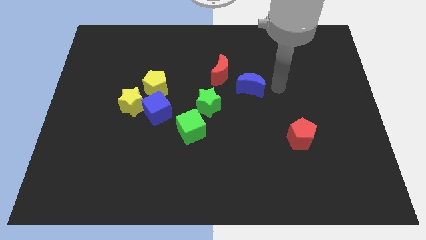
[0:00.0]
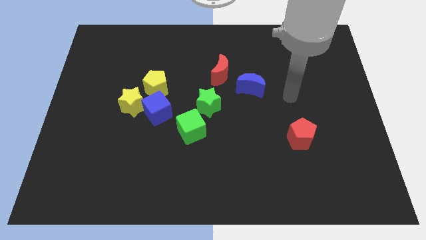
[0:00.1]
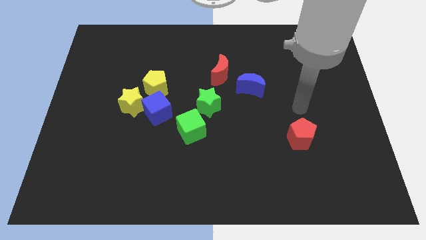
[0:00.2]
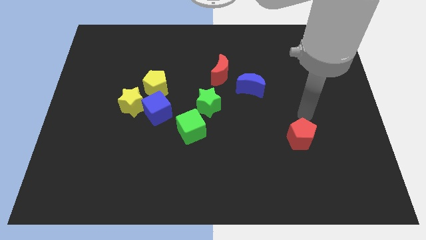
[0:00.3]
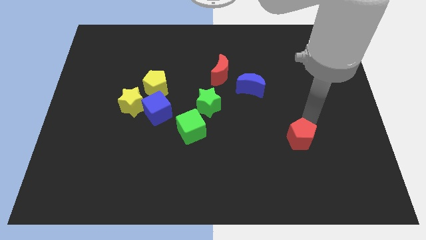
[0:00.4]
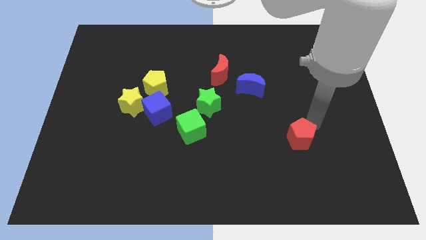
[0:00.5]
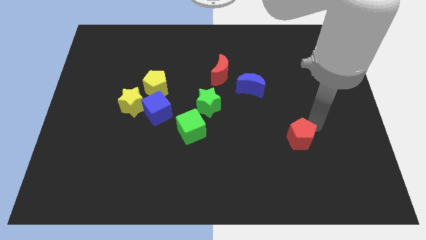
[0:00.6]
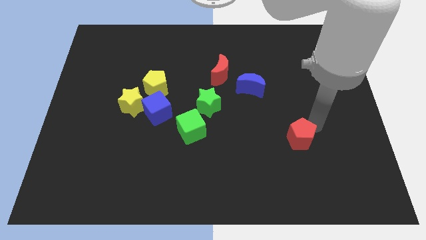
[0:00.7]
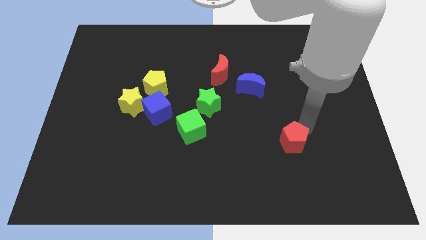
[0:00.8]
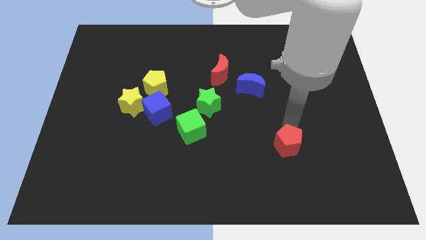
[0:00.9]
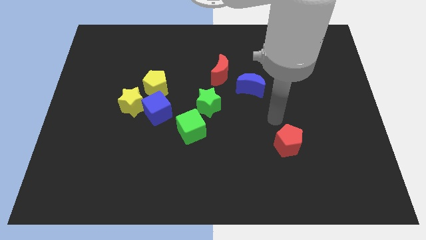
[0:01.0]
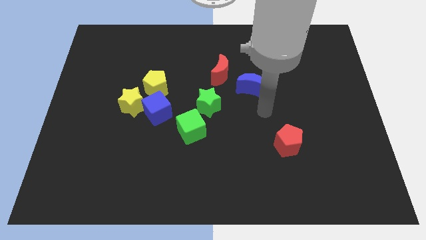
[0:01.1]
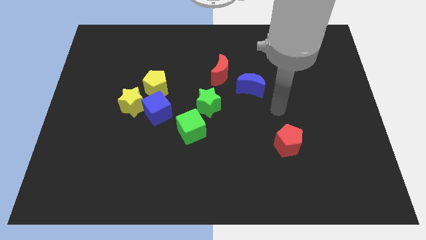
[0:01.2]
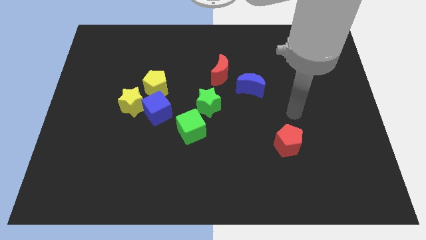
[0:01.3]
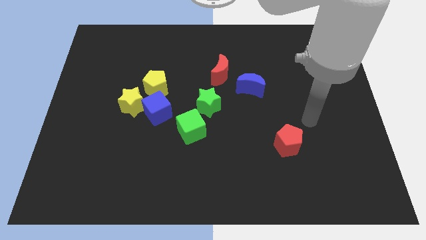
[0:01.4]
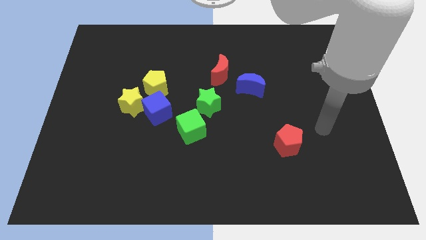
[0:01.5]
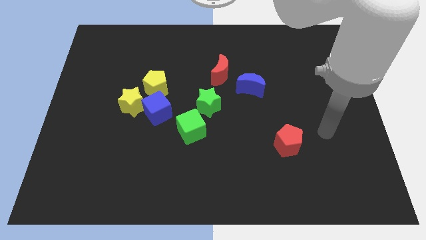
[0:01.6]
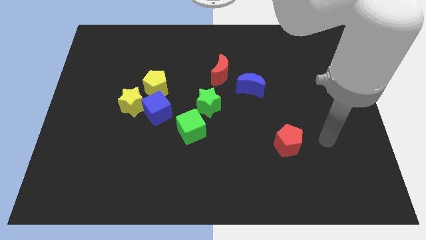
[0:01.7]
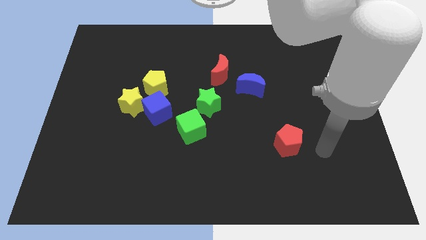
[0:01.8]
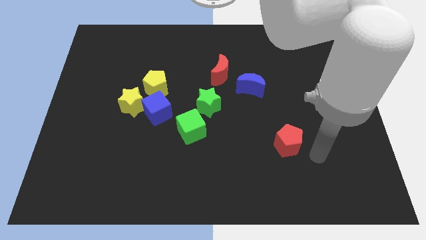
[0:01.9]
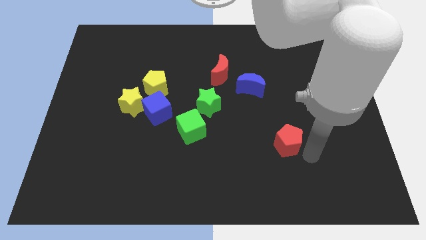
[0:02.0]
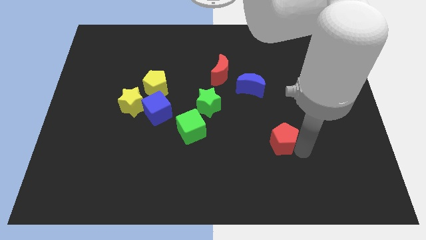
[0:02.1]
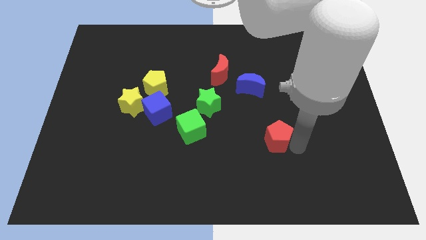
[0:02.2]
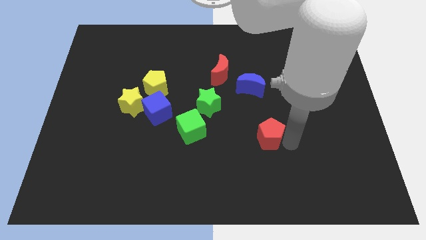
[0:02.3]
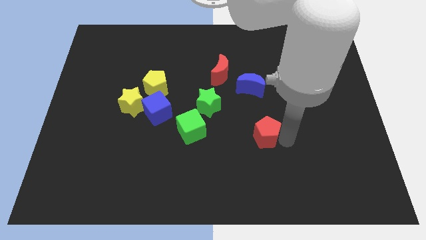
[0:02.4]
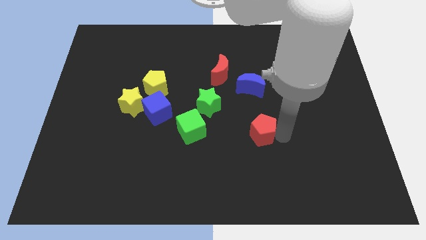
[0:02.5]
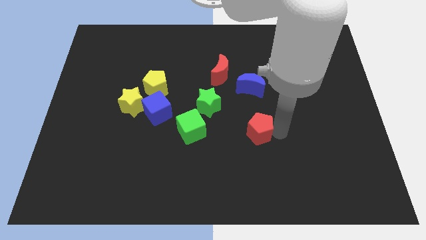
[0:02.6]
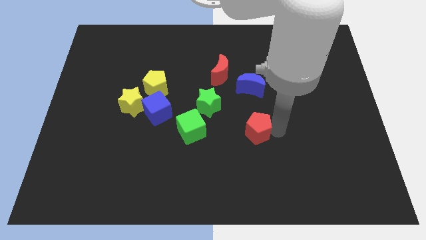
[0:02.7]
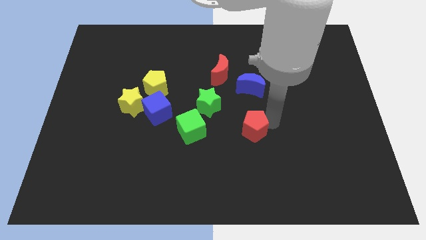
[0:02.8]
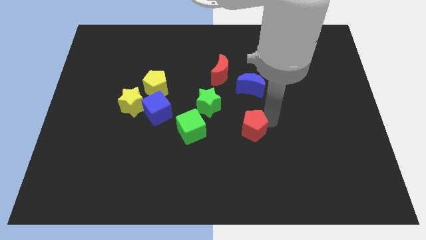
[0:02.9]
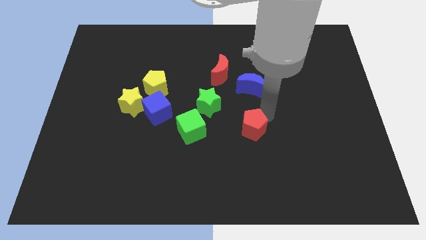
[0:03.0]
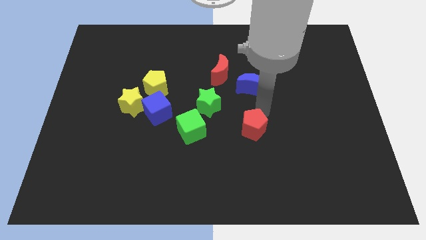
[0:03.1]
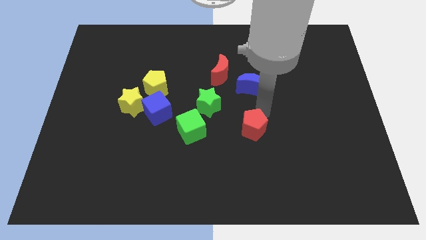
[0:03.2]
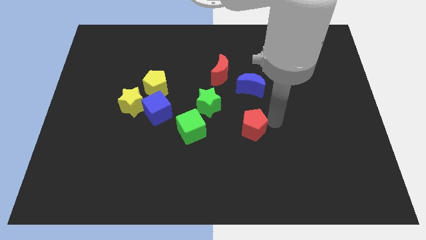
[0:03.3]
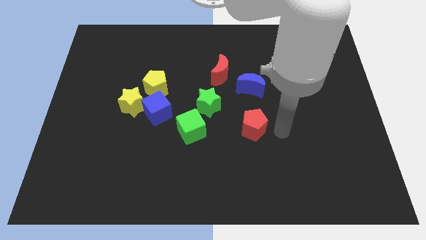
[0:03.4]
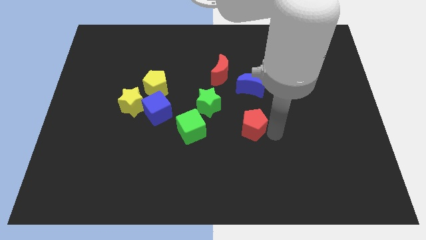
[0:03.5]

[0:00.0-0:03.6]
place the red pentagon below the blue crescent

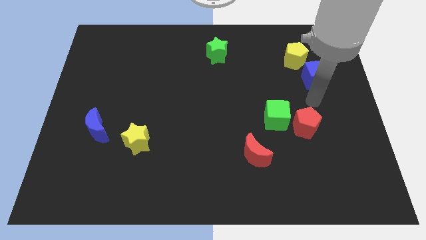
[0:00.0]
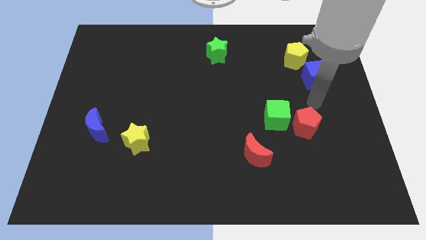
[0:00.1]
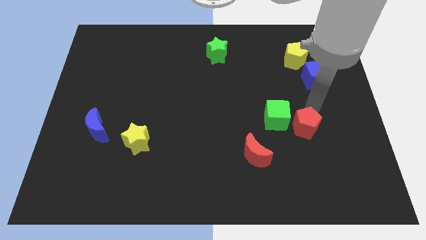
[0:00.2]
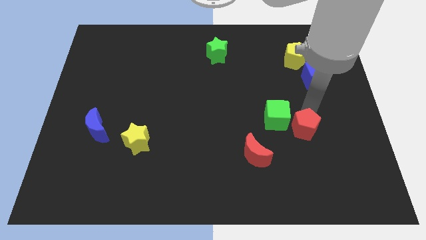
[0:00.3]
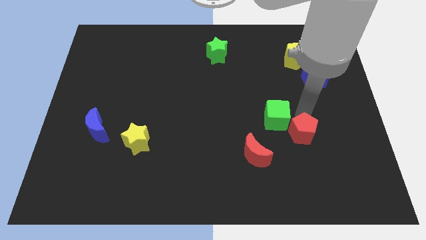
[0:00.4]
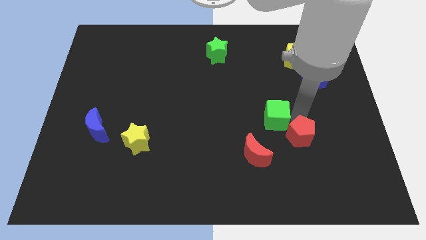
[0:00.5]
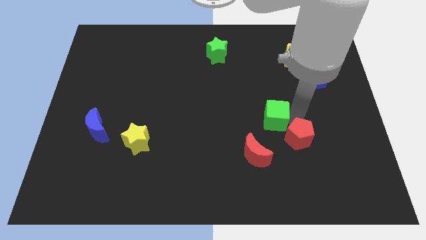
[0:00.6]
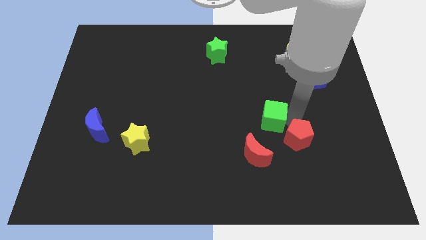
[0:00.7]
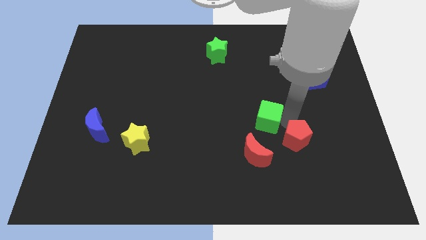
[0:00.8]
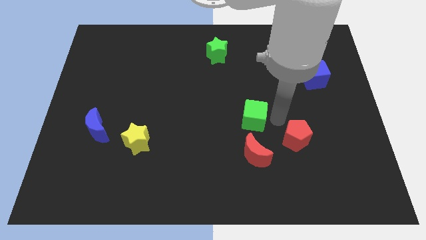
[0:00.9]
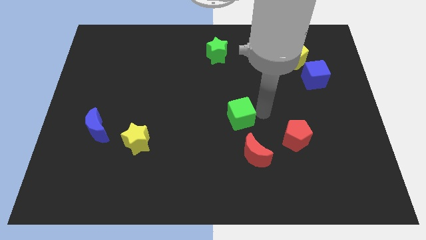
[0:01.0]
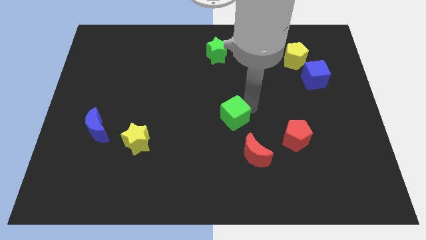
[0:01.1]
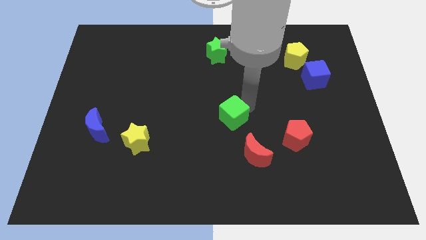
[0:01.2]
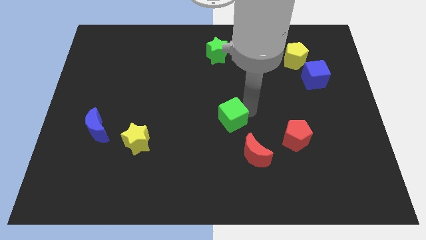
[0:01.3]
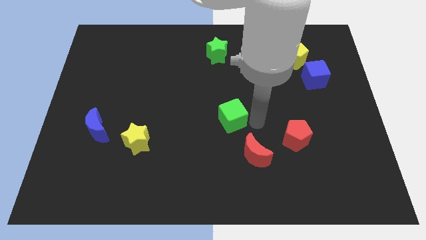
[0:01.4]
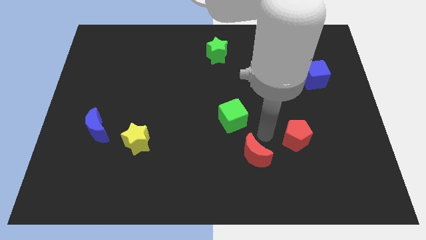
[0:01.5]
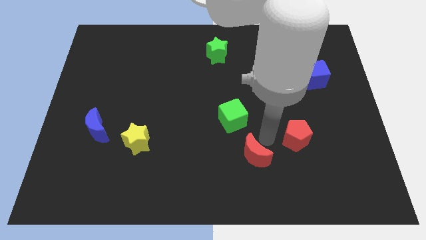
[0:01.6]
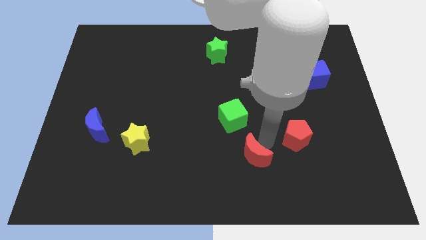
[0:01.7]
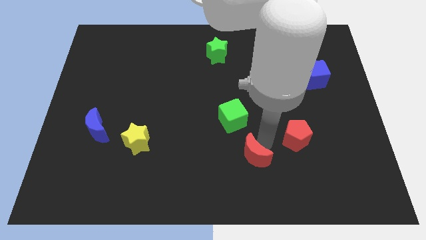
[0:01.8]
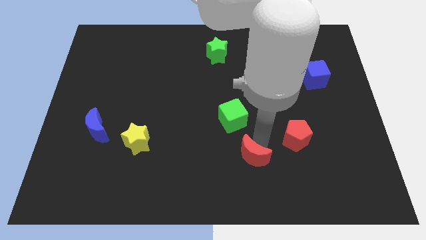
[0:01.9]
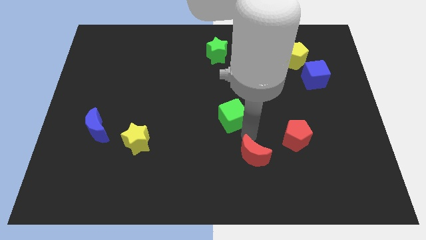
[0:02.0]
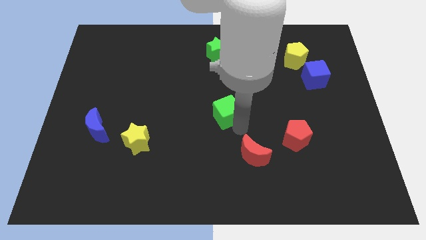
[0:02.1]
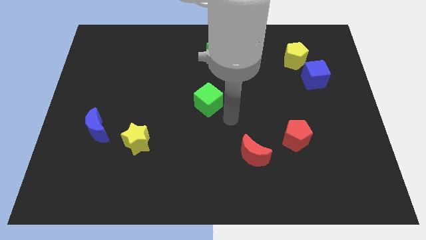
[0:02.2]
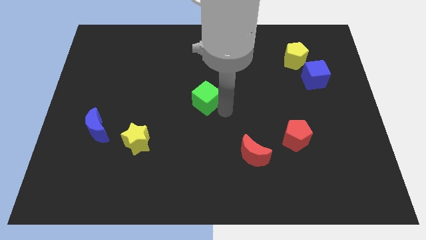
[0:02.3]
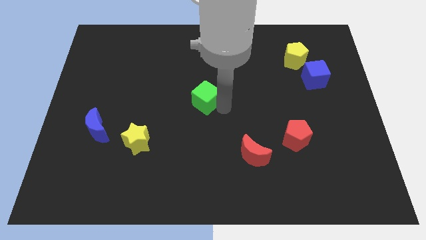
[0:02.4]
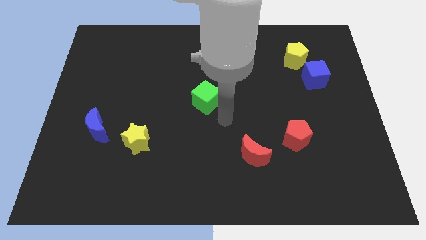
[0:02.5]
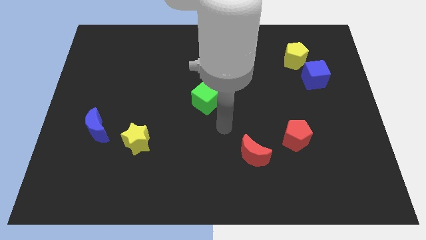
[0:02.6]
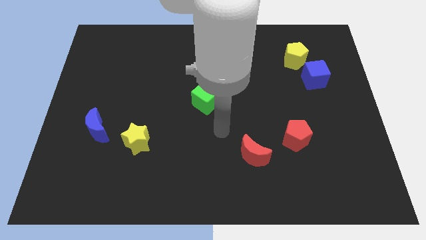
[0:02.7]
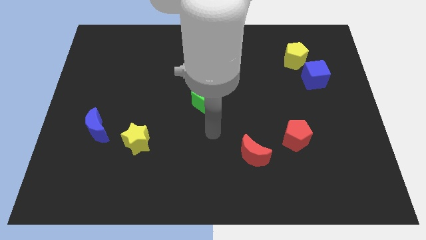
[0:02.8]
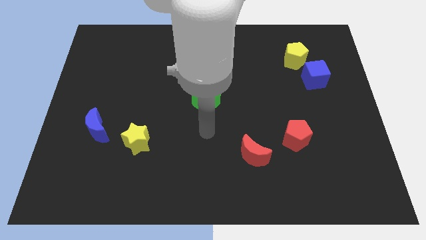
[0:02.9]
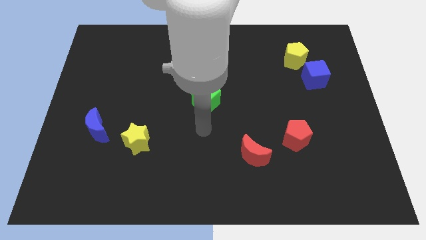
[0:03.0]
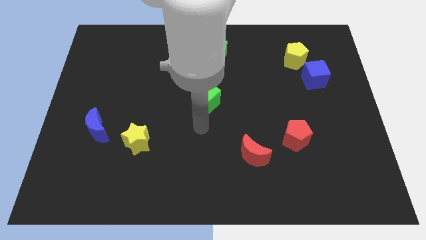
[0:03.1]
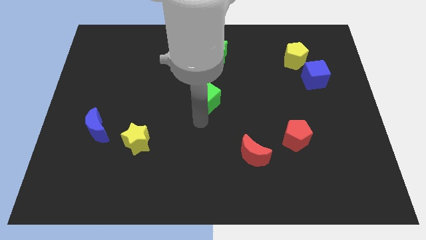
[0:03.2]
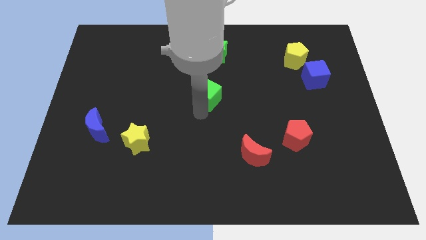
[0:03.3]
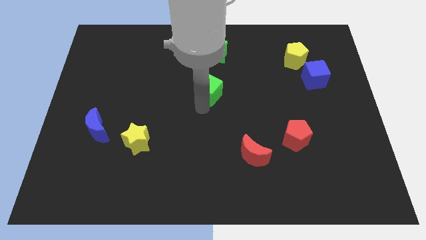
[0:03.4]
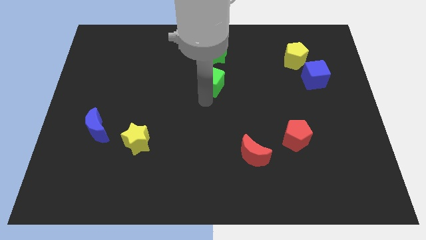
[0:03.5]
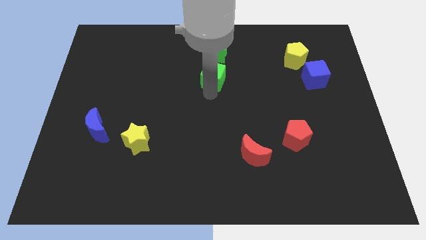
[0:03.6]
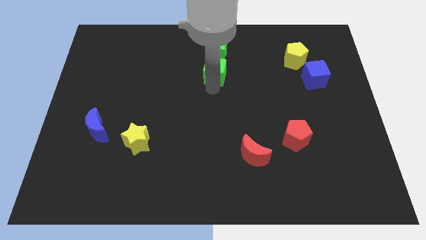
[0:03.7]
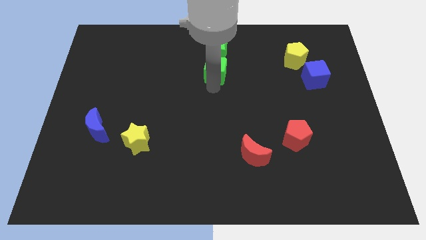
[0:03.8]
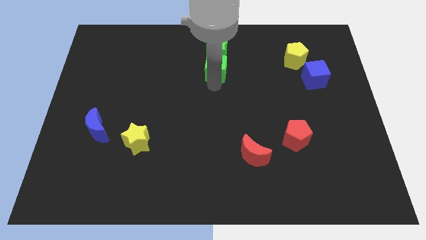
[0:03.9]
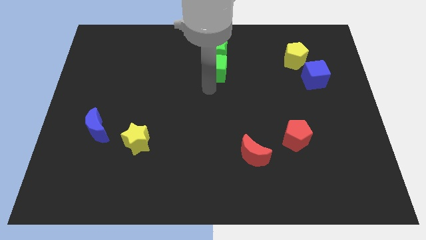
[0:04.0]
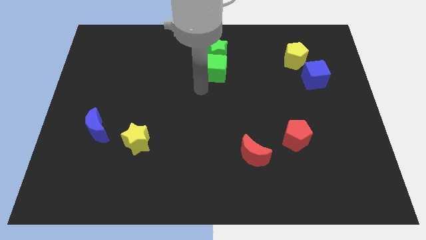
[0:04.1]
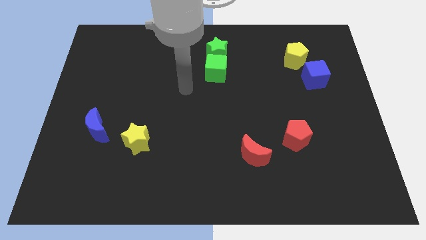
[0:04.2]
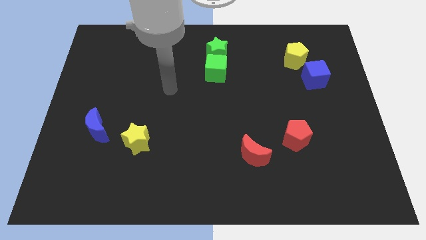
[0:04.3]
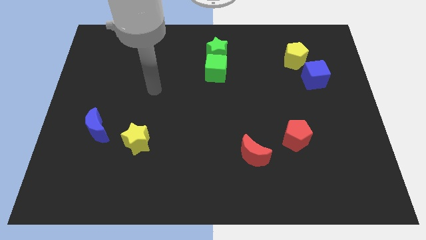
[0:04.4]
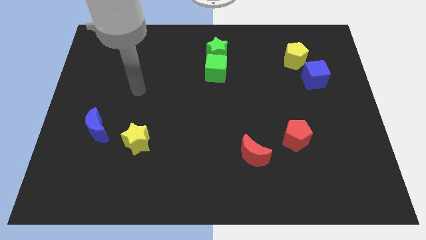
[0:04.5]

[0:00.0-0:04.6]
place the green cube below the green star

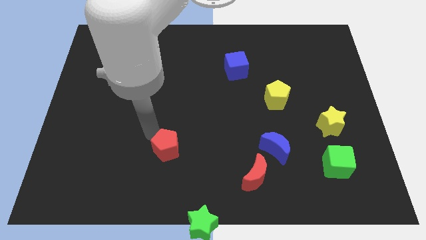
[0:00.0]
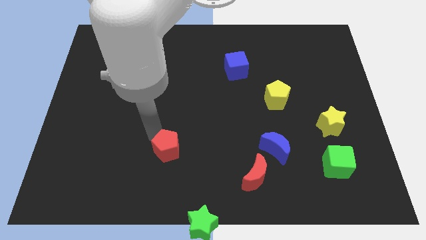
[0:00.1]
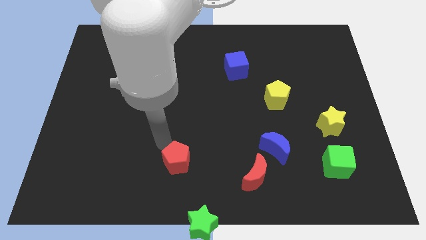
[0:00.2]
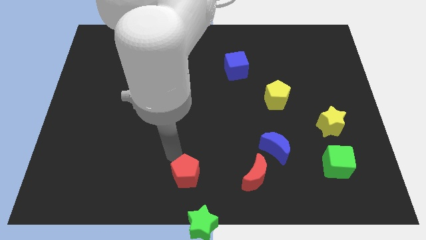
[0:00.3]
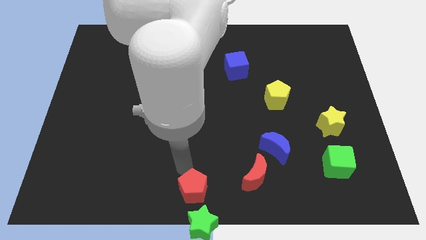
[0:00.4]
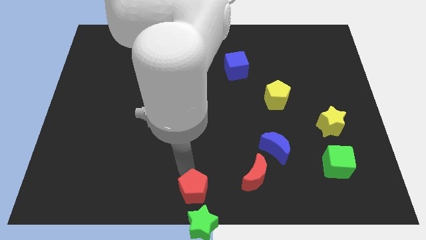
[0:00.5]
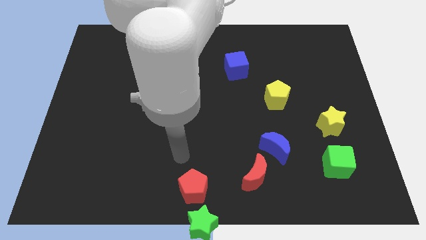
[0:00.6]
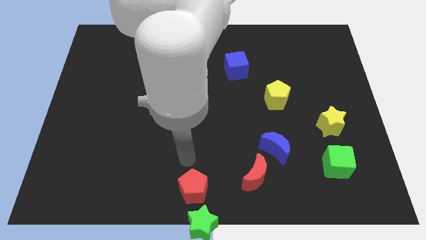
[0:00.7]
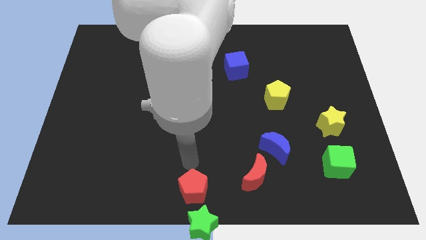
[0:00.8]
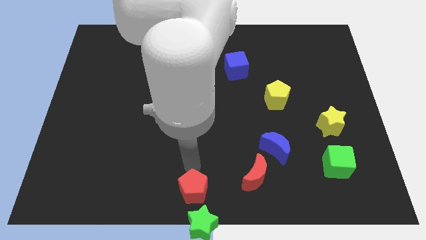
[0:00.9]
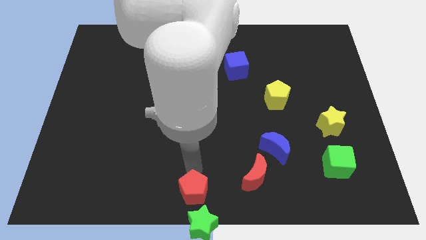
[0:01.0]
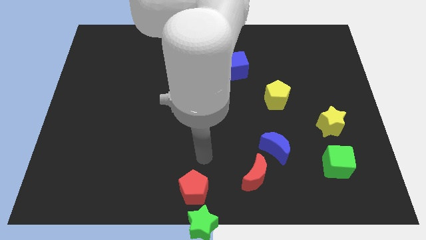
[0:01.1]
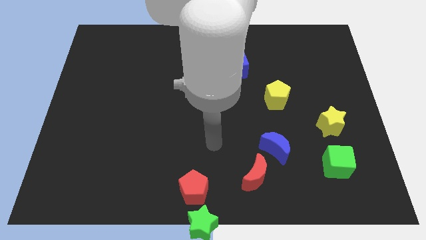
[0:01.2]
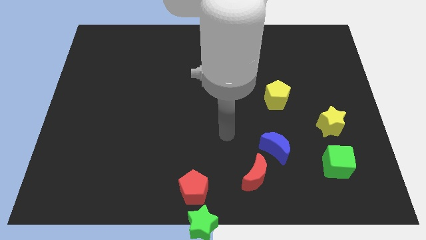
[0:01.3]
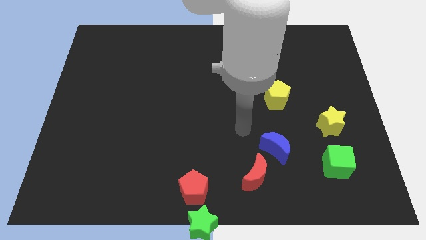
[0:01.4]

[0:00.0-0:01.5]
move the red pentagon to the top left side of the green star
